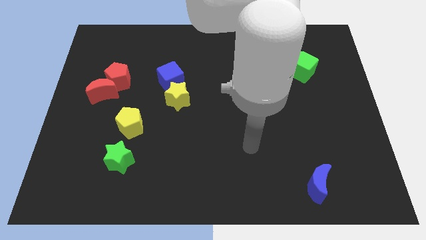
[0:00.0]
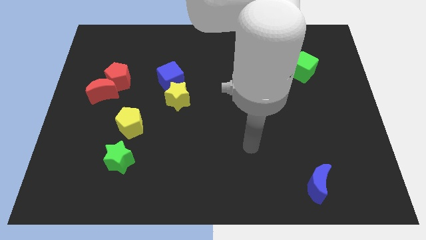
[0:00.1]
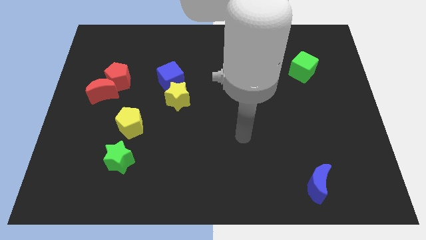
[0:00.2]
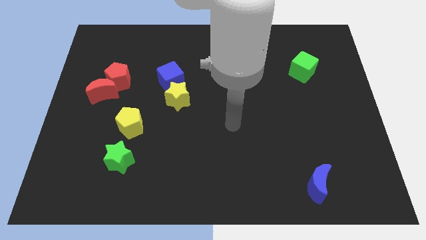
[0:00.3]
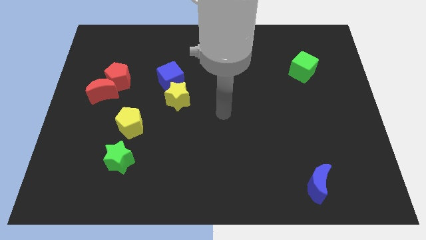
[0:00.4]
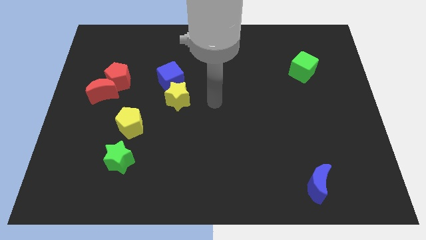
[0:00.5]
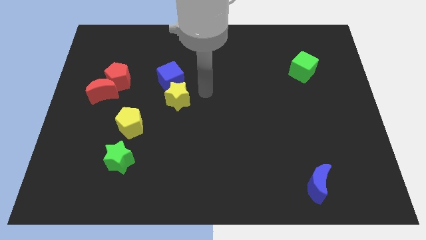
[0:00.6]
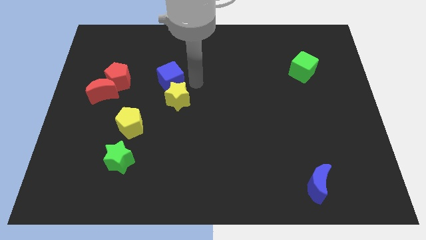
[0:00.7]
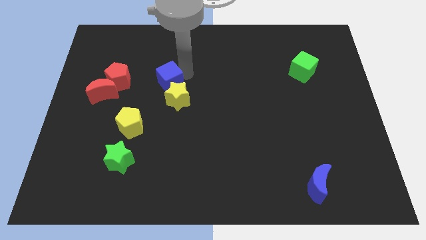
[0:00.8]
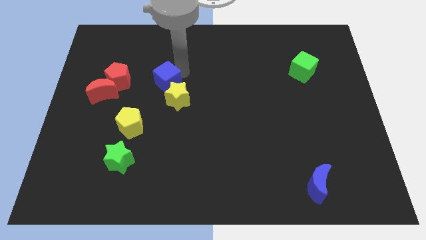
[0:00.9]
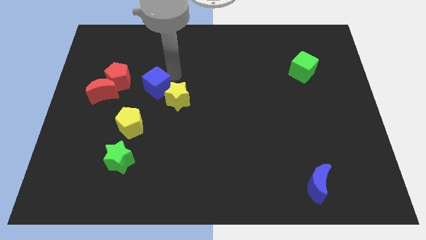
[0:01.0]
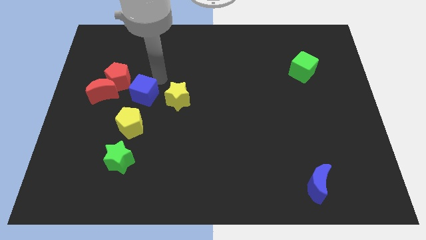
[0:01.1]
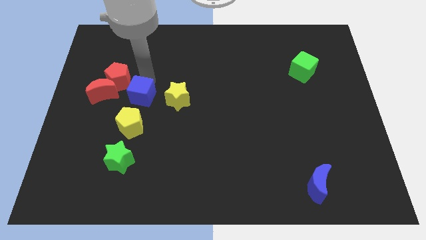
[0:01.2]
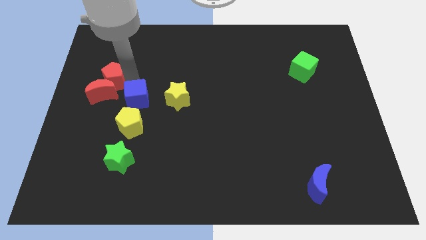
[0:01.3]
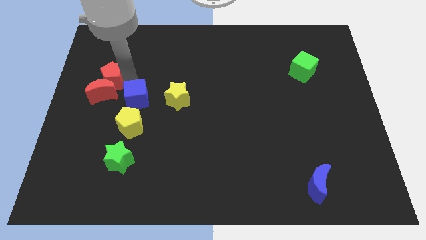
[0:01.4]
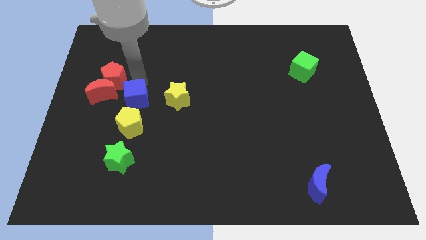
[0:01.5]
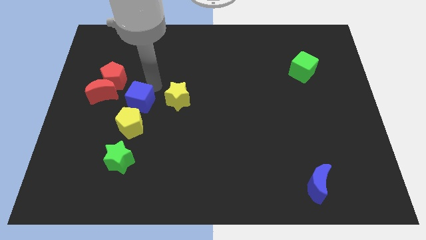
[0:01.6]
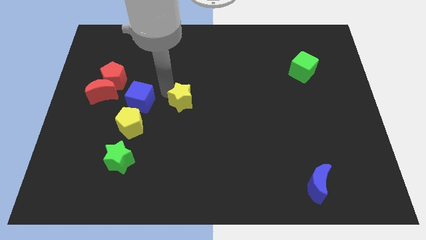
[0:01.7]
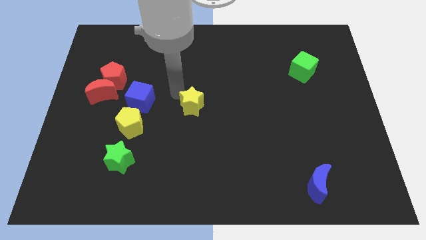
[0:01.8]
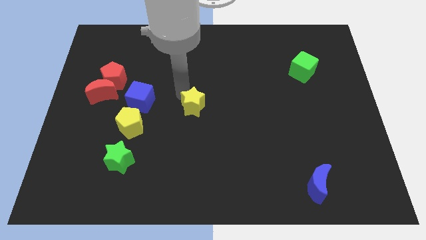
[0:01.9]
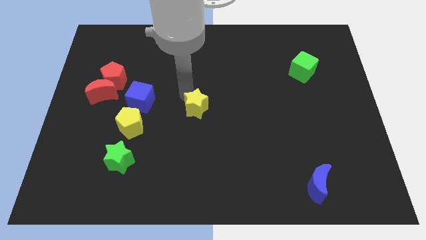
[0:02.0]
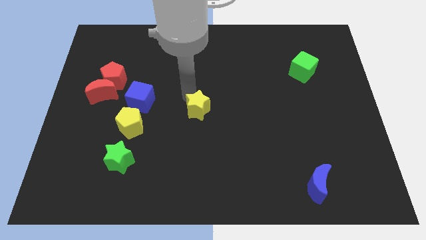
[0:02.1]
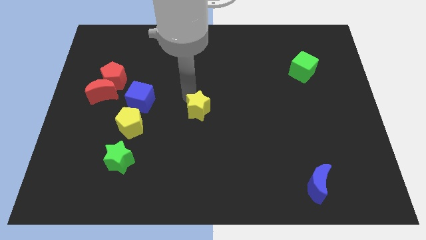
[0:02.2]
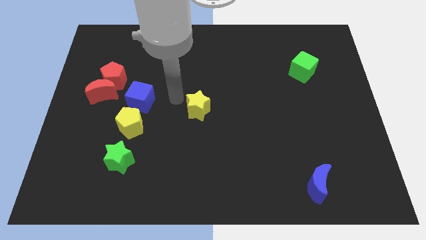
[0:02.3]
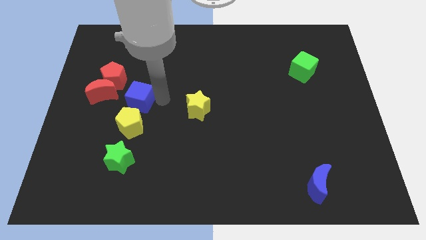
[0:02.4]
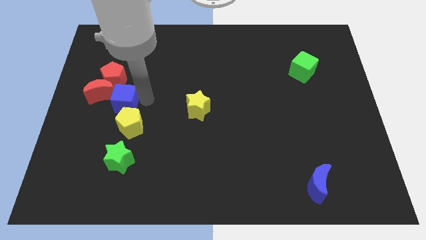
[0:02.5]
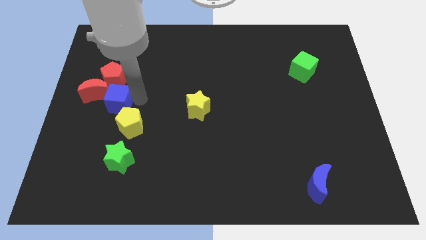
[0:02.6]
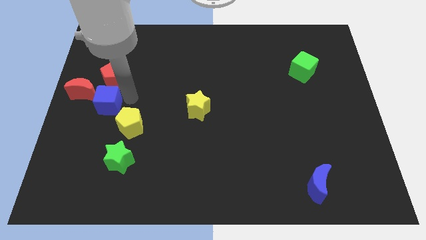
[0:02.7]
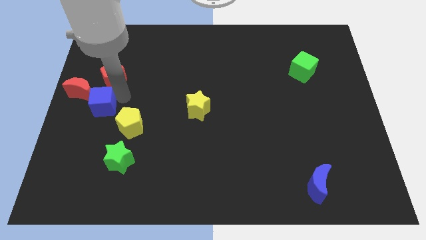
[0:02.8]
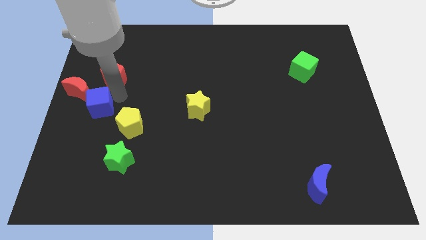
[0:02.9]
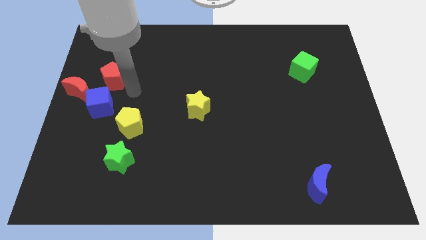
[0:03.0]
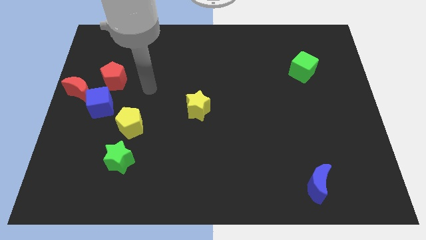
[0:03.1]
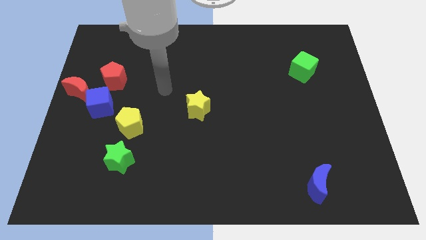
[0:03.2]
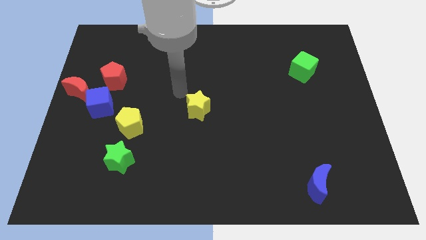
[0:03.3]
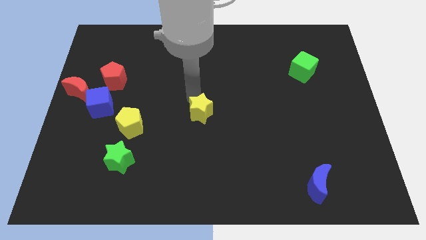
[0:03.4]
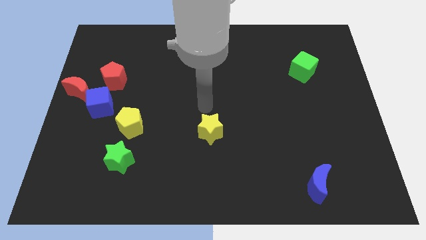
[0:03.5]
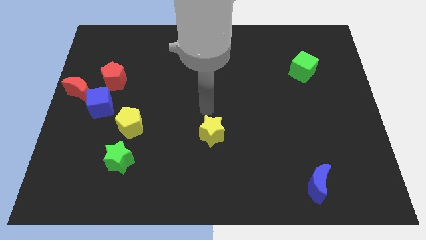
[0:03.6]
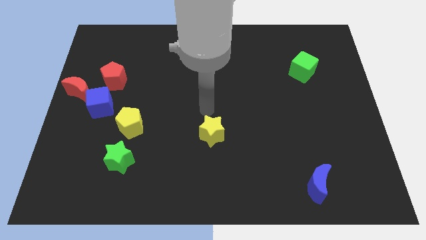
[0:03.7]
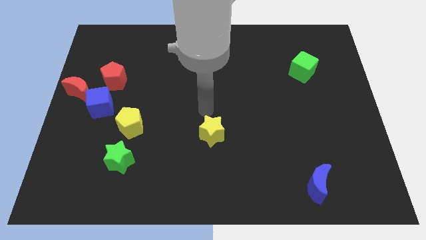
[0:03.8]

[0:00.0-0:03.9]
place the yellow star horizontally to the right isde of the yellow pentagon

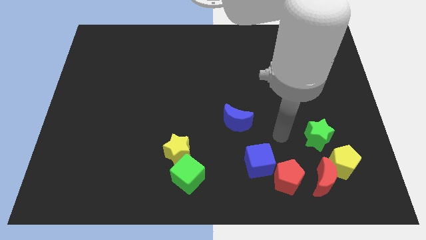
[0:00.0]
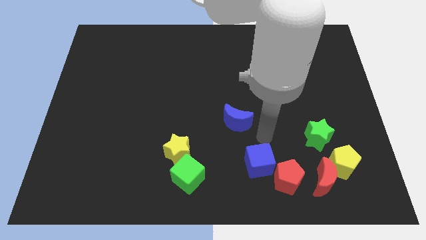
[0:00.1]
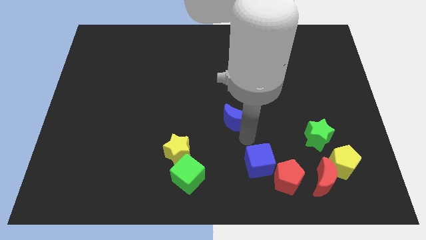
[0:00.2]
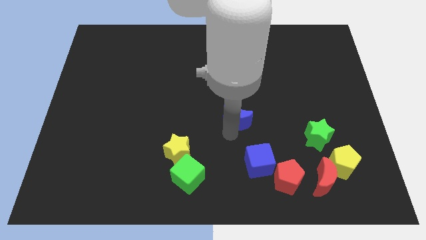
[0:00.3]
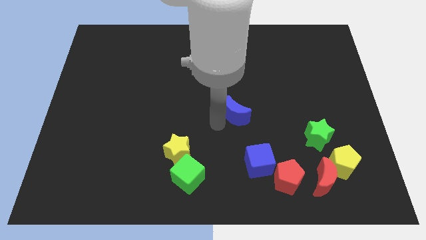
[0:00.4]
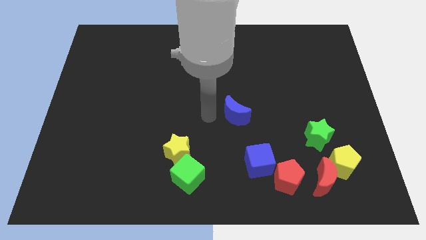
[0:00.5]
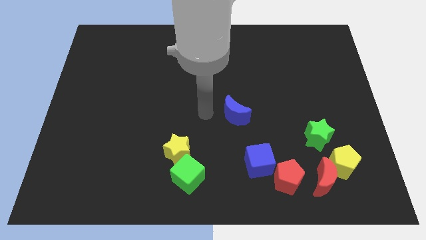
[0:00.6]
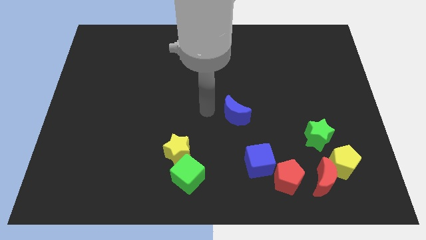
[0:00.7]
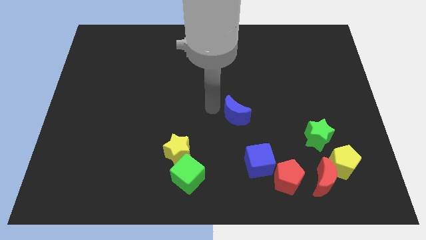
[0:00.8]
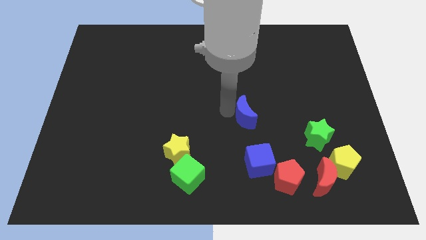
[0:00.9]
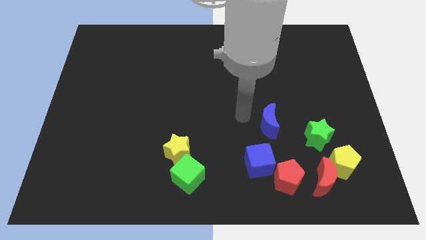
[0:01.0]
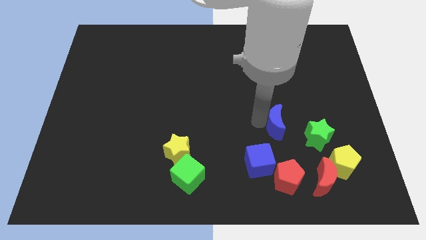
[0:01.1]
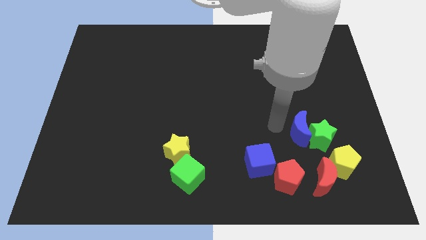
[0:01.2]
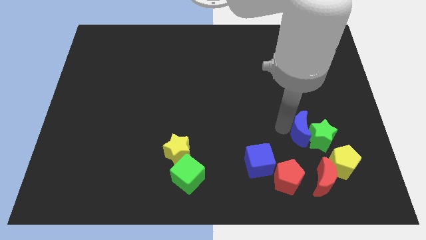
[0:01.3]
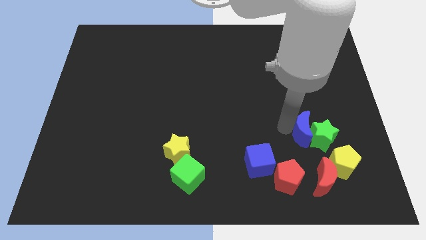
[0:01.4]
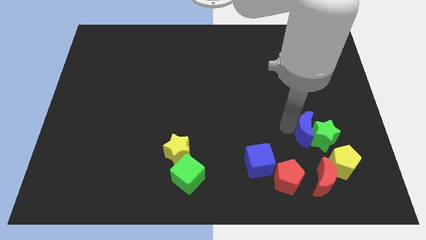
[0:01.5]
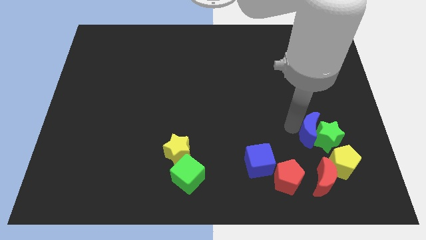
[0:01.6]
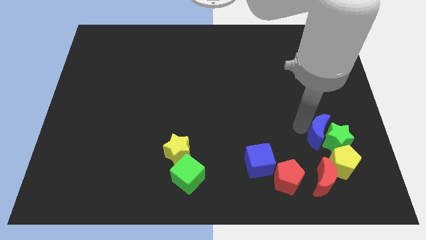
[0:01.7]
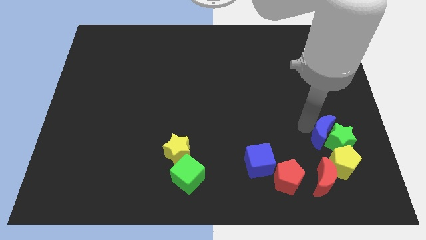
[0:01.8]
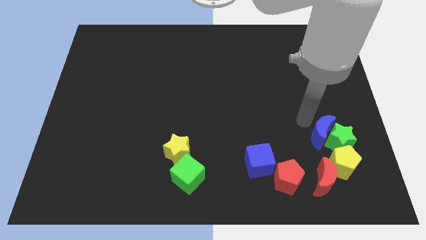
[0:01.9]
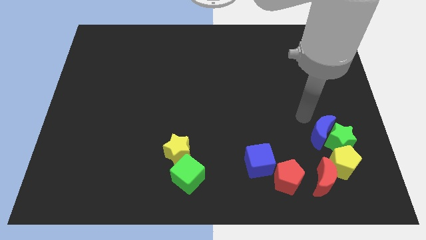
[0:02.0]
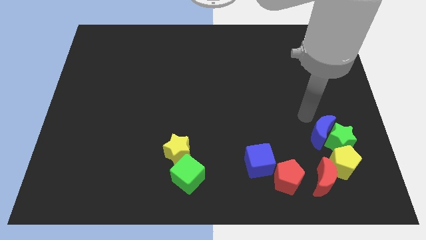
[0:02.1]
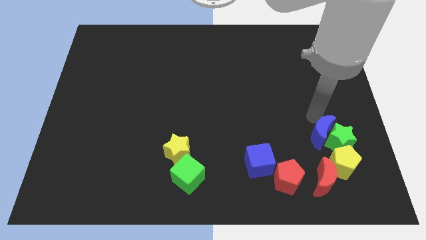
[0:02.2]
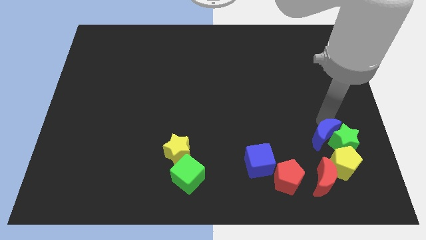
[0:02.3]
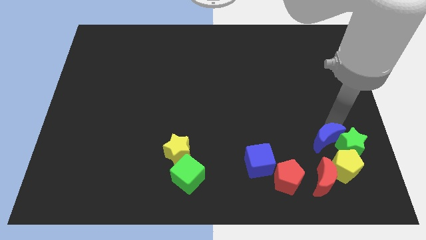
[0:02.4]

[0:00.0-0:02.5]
push blue crescent into the green star

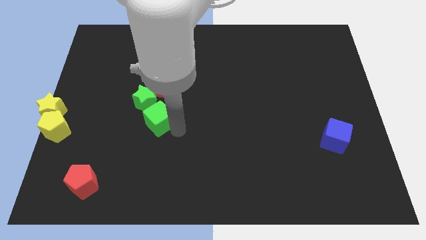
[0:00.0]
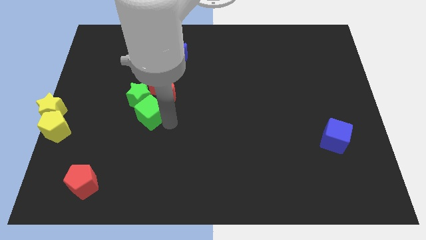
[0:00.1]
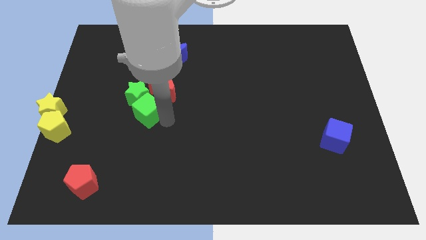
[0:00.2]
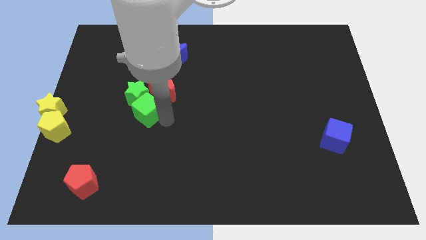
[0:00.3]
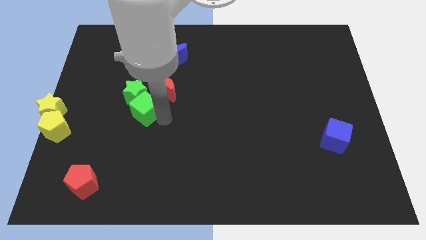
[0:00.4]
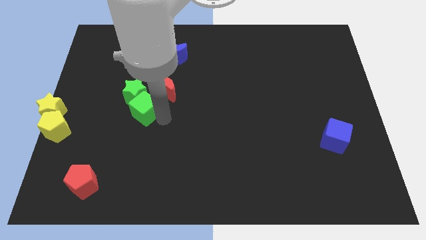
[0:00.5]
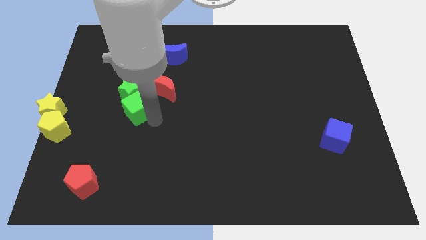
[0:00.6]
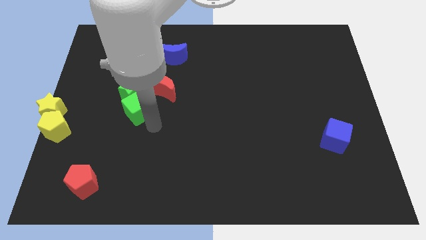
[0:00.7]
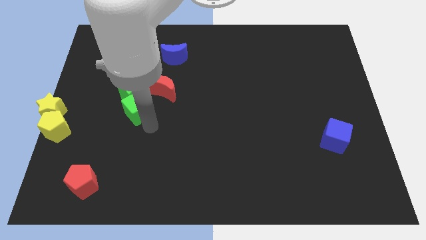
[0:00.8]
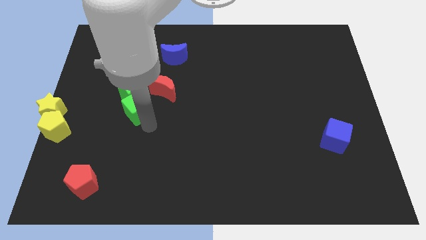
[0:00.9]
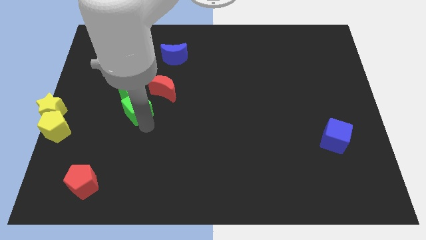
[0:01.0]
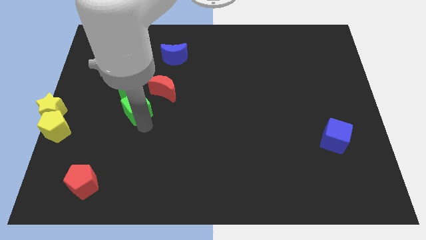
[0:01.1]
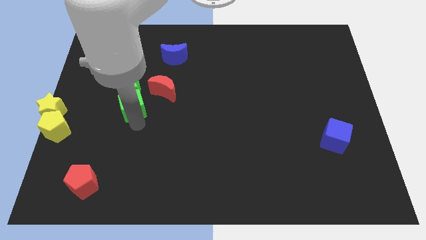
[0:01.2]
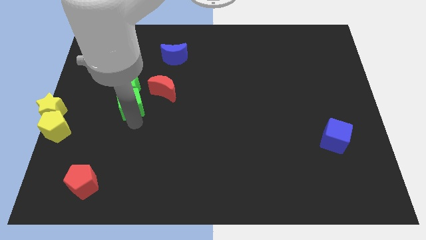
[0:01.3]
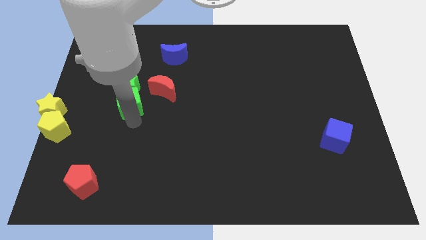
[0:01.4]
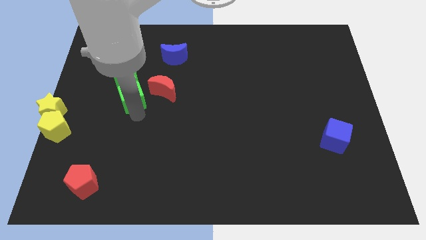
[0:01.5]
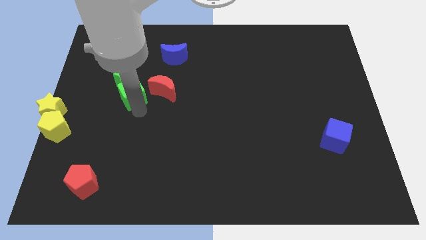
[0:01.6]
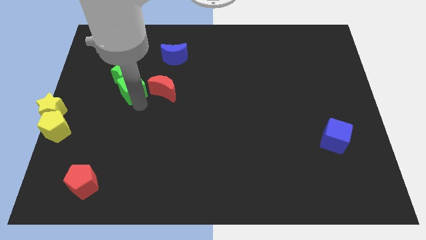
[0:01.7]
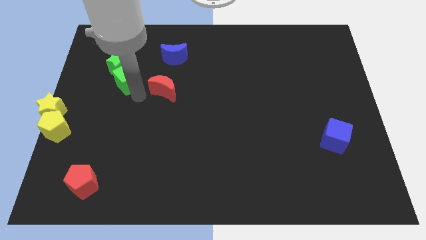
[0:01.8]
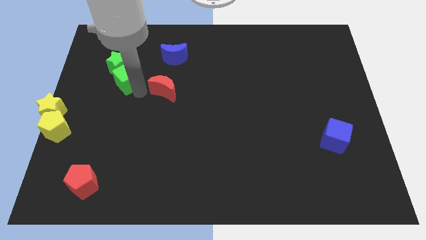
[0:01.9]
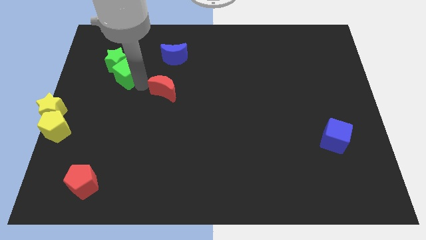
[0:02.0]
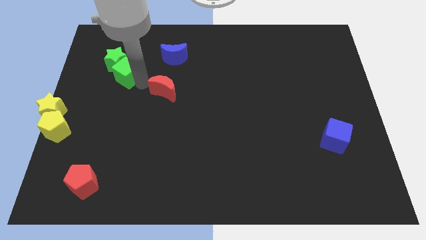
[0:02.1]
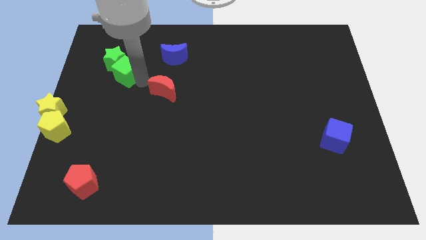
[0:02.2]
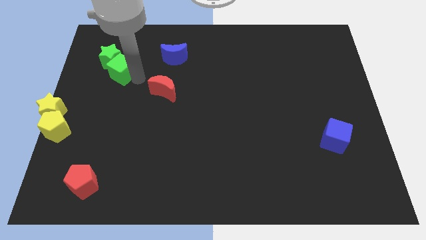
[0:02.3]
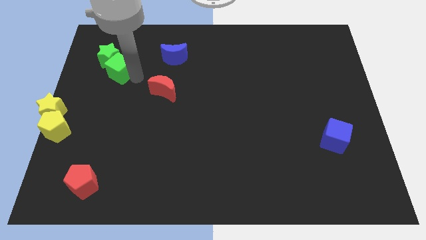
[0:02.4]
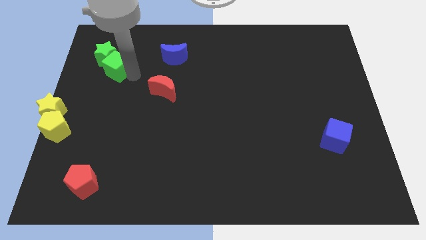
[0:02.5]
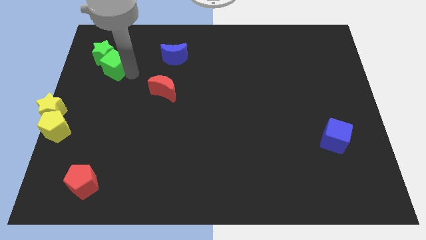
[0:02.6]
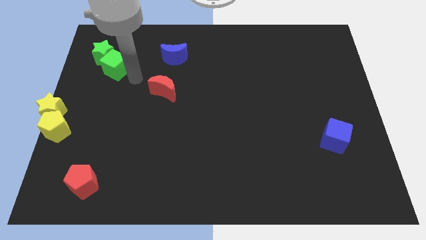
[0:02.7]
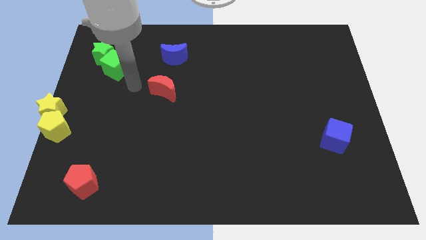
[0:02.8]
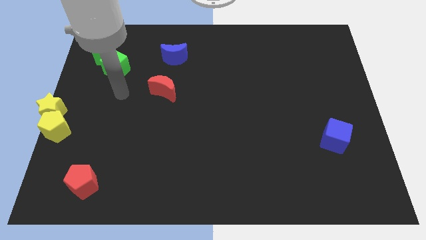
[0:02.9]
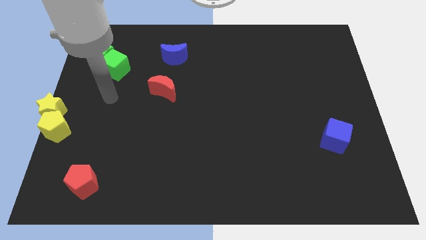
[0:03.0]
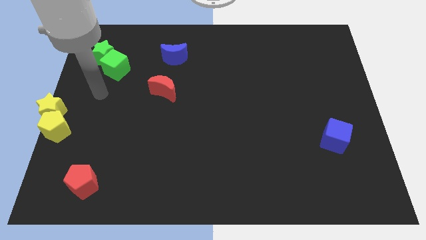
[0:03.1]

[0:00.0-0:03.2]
drag green star above red pentagon
